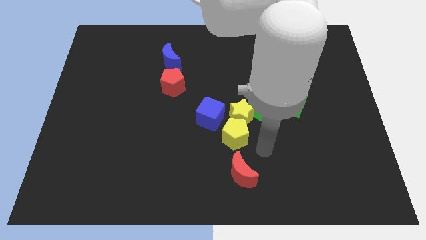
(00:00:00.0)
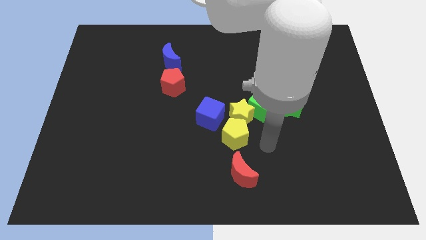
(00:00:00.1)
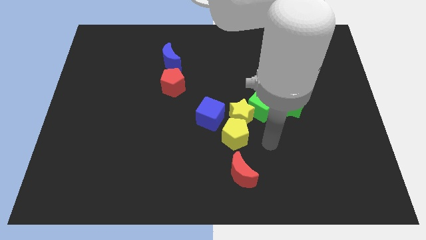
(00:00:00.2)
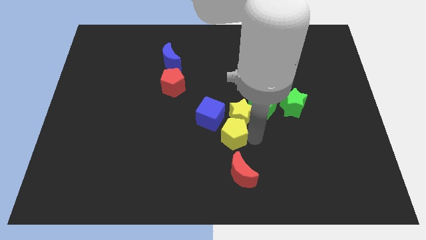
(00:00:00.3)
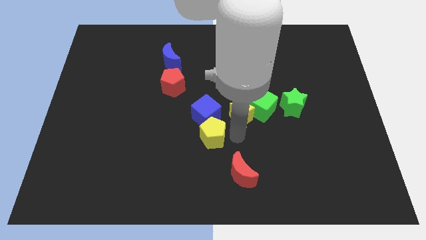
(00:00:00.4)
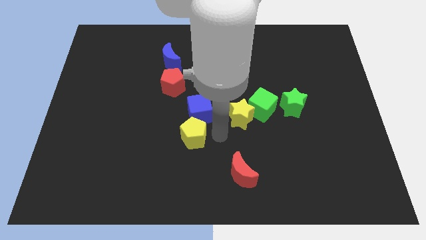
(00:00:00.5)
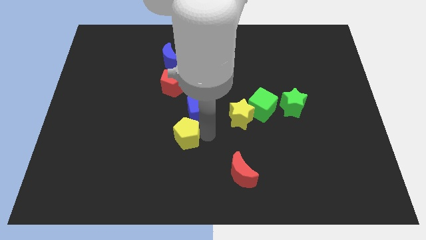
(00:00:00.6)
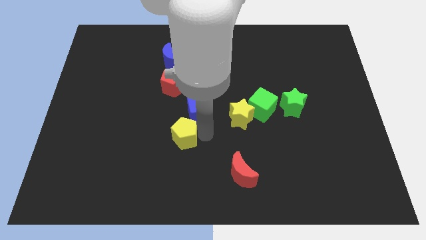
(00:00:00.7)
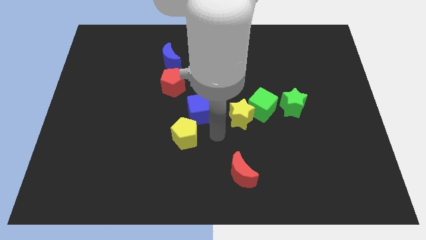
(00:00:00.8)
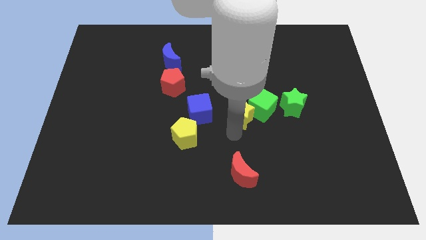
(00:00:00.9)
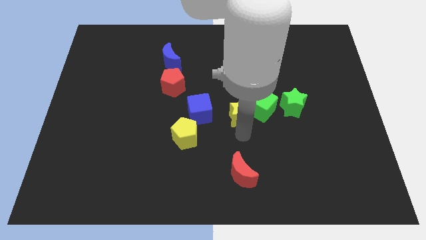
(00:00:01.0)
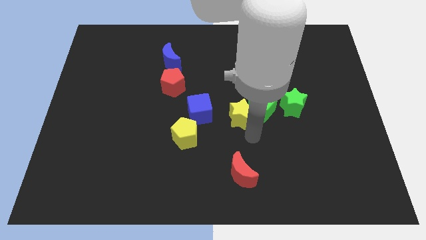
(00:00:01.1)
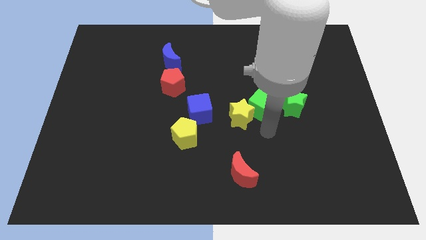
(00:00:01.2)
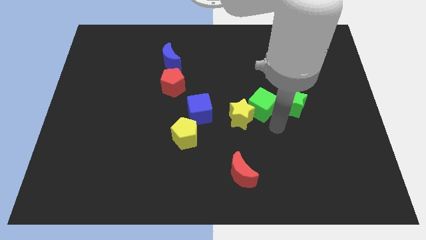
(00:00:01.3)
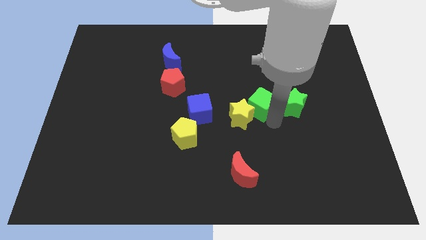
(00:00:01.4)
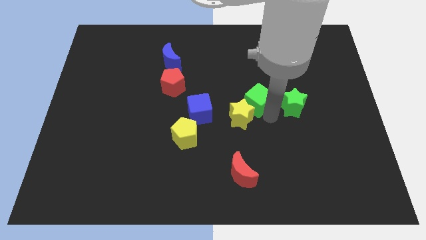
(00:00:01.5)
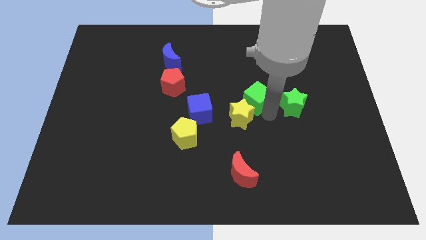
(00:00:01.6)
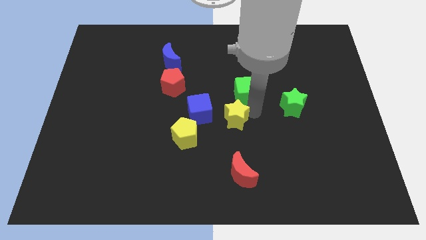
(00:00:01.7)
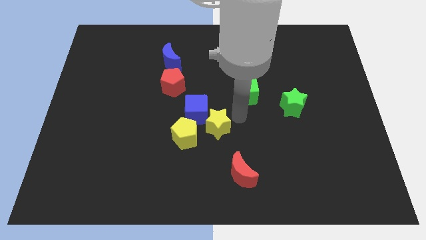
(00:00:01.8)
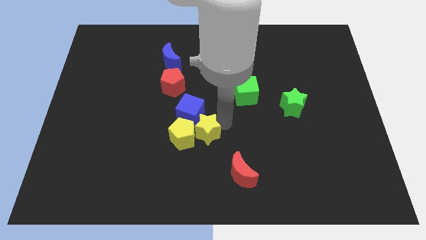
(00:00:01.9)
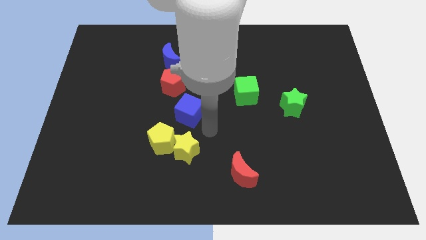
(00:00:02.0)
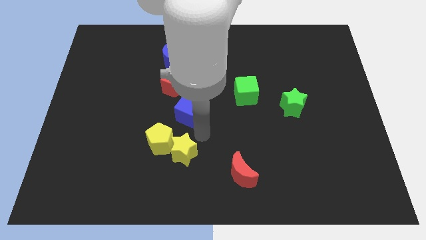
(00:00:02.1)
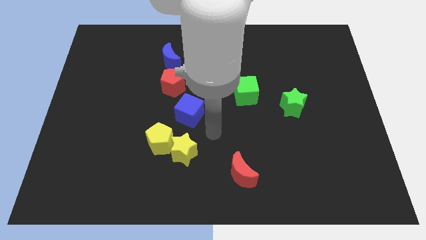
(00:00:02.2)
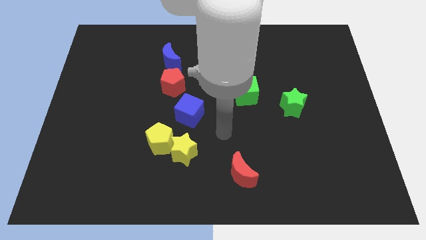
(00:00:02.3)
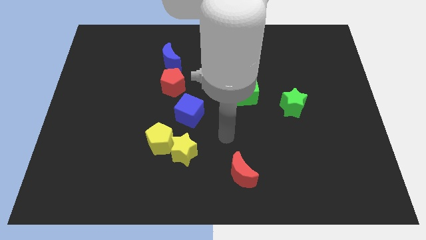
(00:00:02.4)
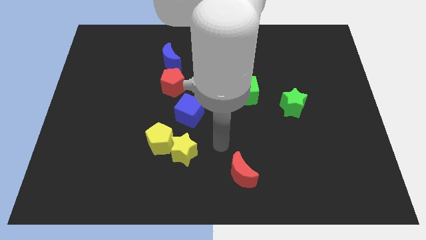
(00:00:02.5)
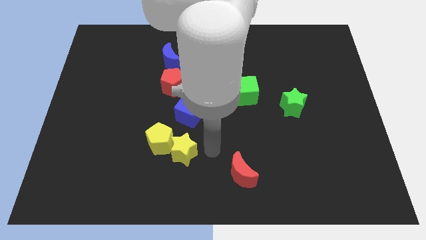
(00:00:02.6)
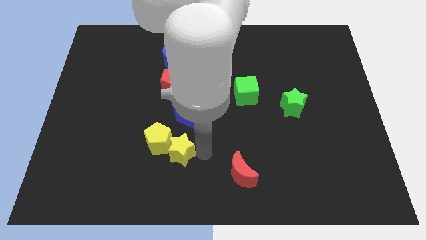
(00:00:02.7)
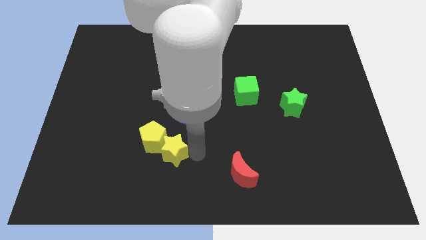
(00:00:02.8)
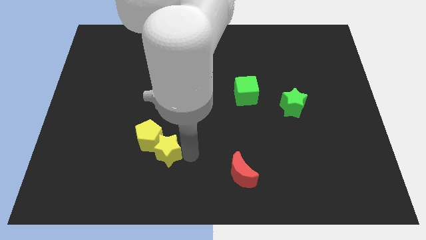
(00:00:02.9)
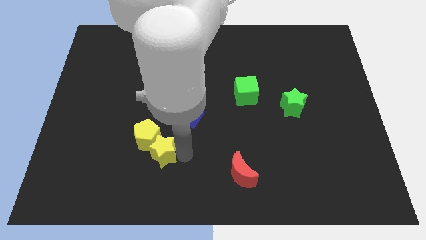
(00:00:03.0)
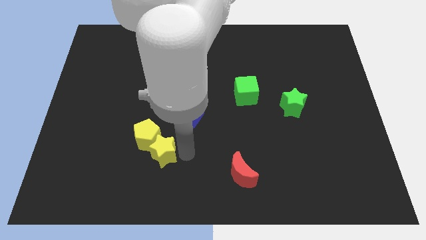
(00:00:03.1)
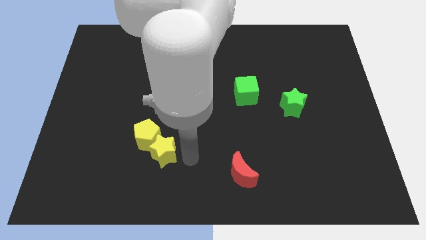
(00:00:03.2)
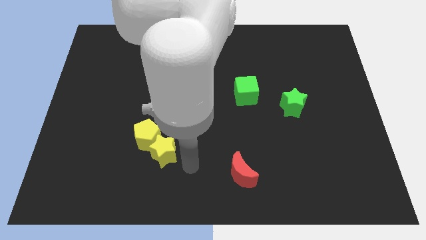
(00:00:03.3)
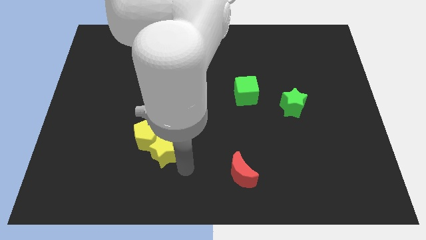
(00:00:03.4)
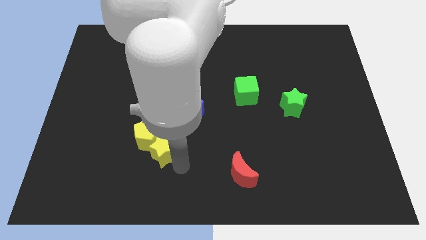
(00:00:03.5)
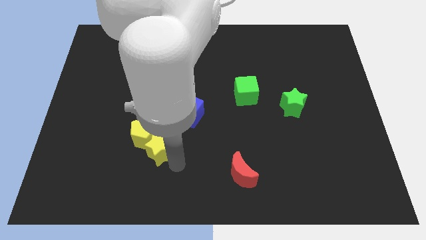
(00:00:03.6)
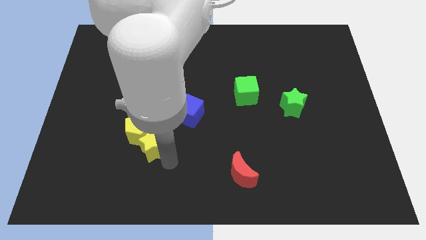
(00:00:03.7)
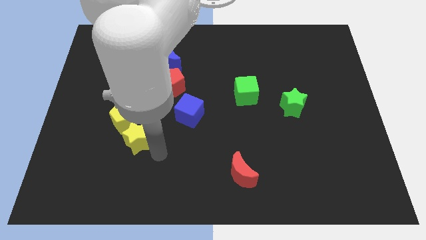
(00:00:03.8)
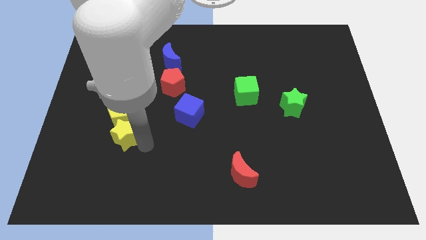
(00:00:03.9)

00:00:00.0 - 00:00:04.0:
move the yellow blocks to the center left

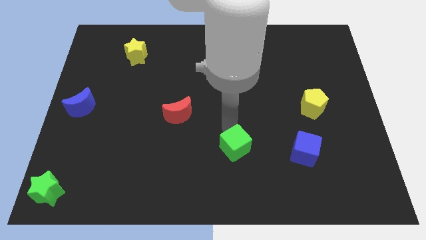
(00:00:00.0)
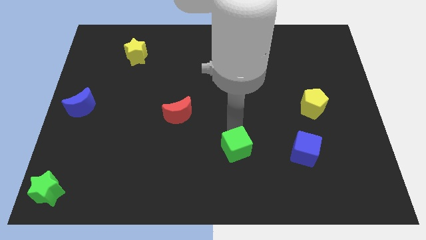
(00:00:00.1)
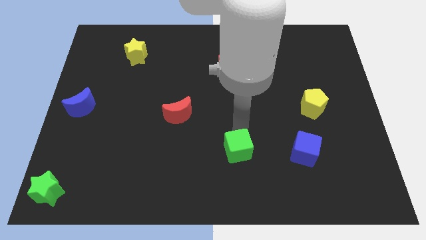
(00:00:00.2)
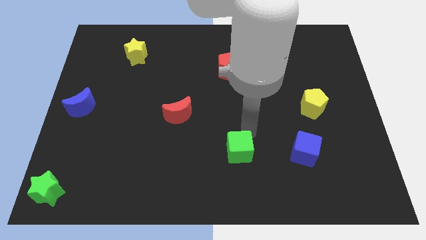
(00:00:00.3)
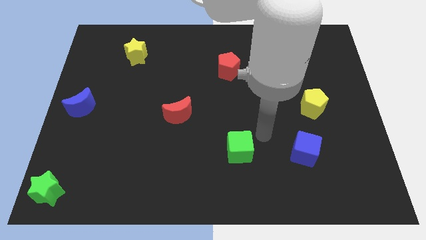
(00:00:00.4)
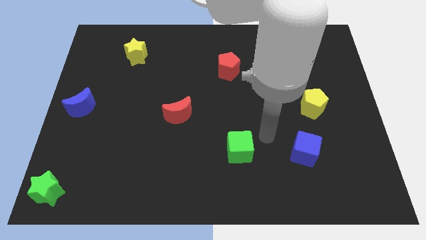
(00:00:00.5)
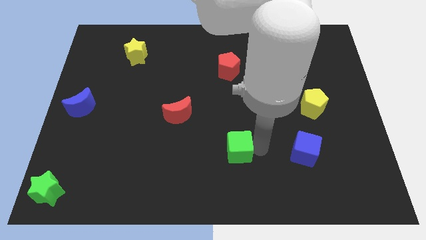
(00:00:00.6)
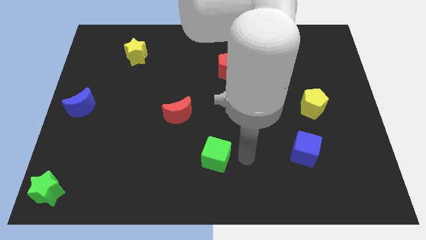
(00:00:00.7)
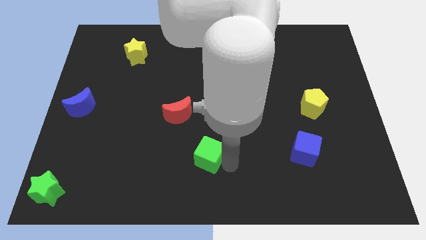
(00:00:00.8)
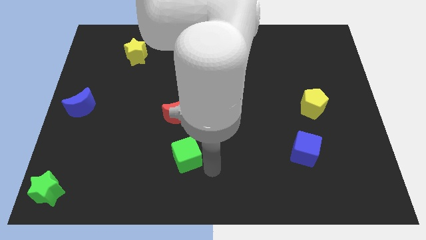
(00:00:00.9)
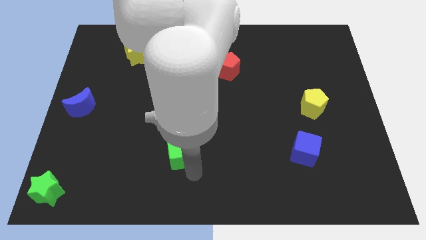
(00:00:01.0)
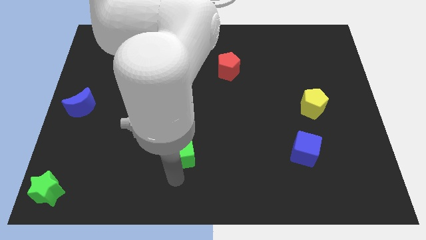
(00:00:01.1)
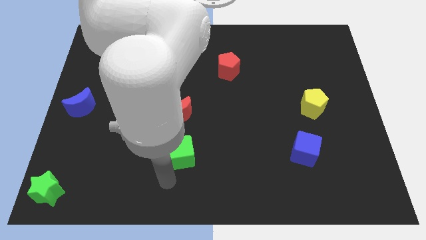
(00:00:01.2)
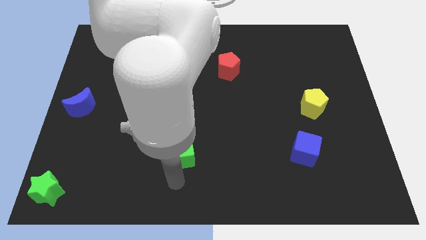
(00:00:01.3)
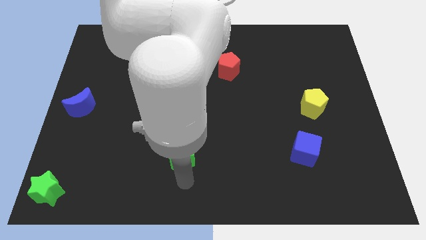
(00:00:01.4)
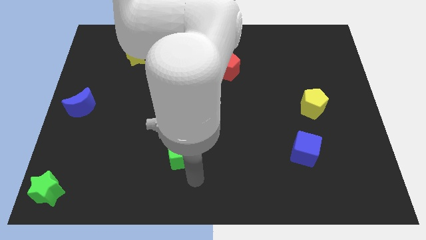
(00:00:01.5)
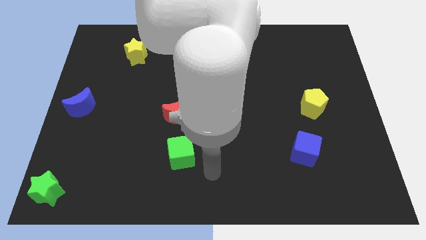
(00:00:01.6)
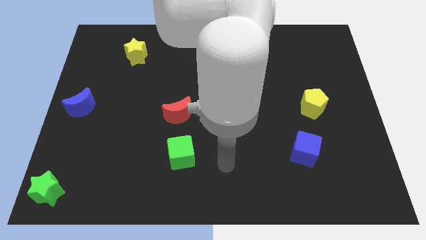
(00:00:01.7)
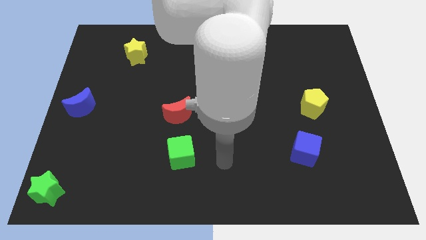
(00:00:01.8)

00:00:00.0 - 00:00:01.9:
put the green cube below the red crescent

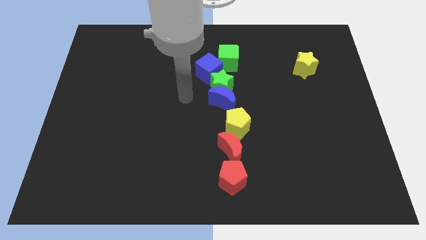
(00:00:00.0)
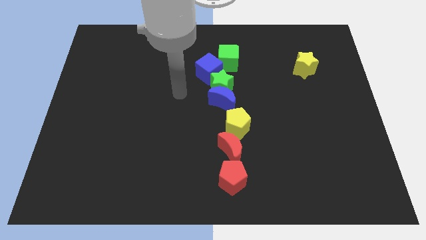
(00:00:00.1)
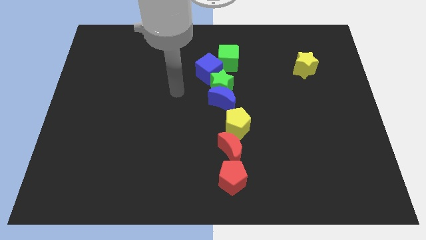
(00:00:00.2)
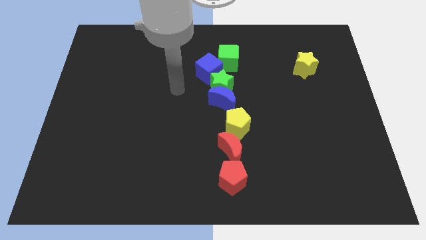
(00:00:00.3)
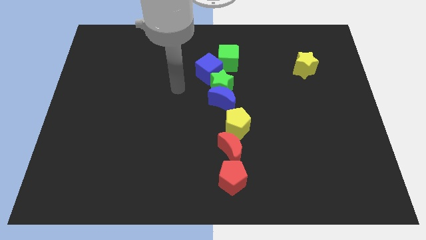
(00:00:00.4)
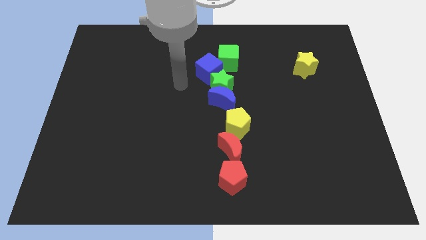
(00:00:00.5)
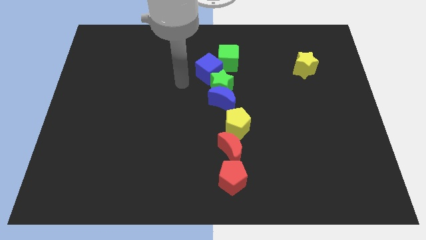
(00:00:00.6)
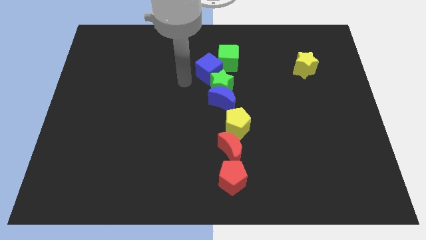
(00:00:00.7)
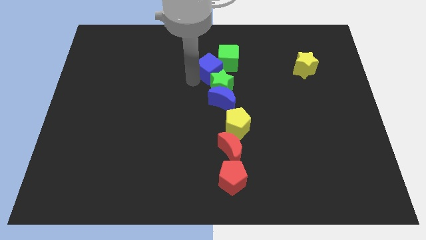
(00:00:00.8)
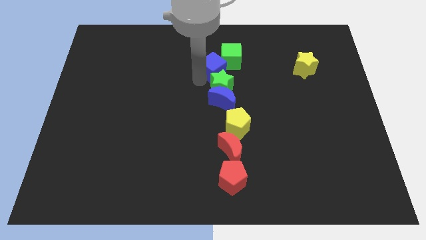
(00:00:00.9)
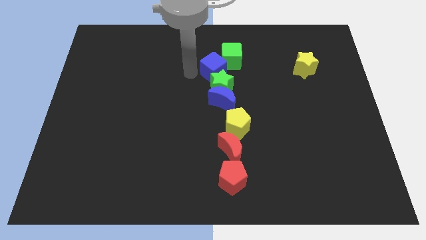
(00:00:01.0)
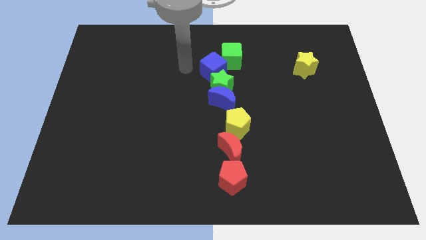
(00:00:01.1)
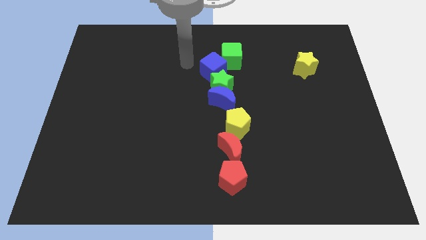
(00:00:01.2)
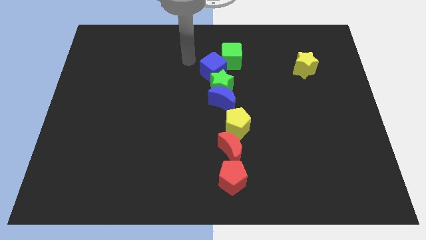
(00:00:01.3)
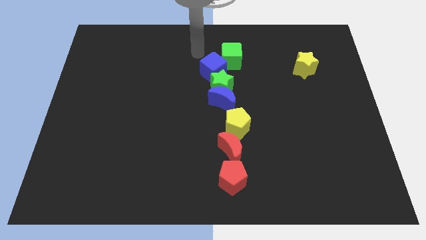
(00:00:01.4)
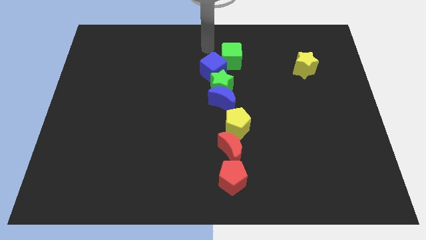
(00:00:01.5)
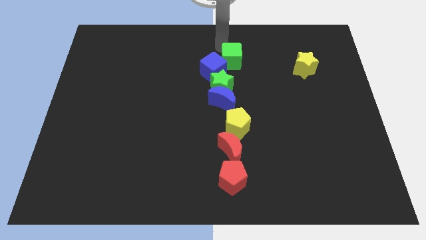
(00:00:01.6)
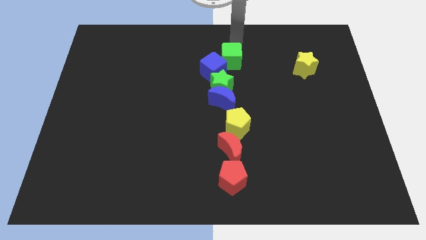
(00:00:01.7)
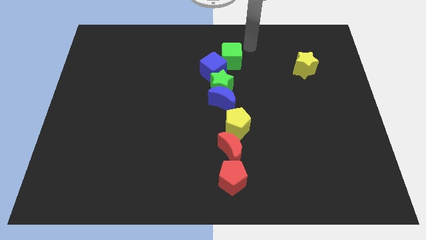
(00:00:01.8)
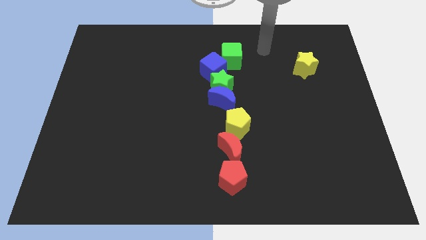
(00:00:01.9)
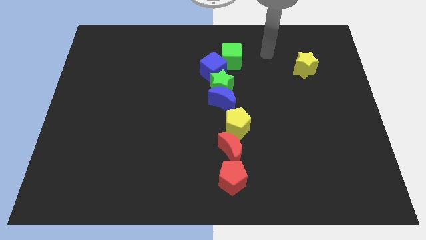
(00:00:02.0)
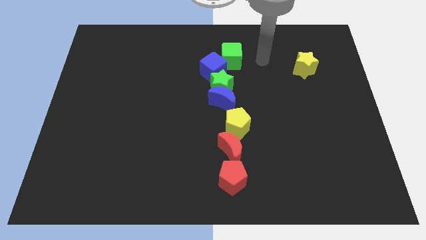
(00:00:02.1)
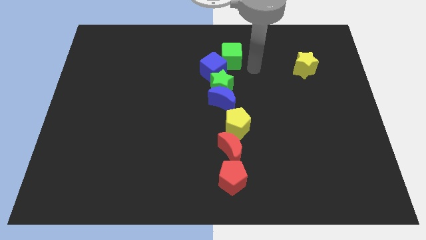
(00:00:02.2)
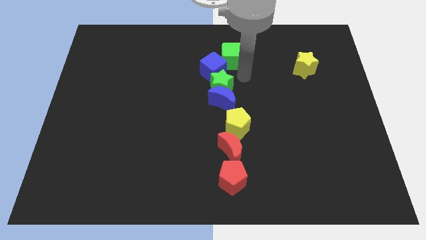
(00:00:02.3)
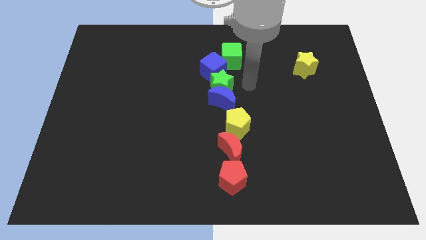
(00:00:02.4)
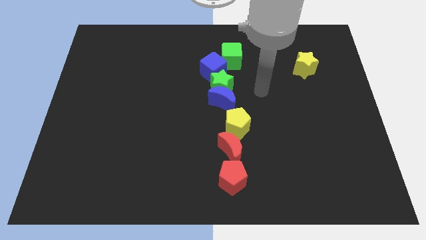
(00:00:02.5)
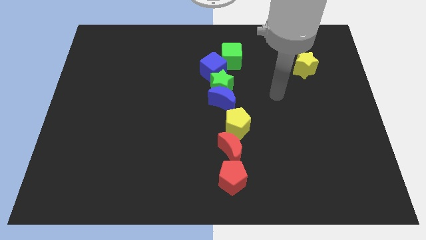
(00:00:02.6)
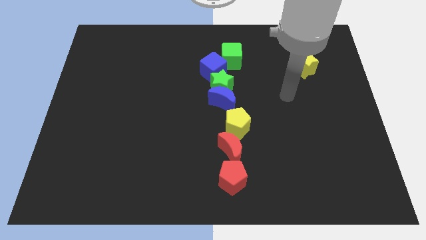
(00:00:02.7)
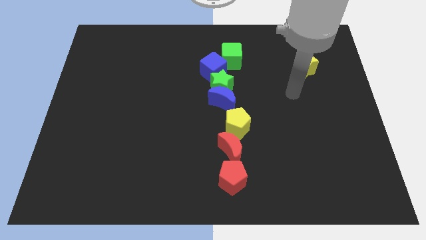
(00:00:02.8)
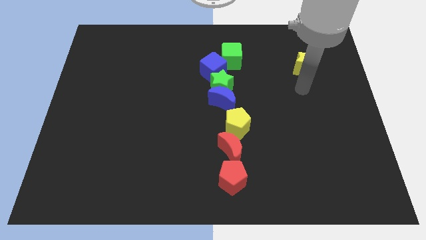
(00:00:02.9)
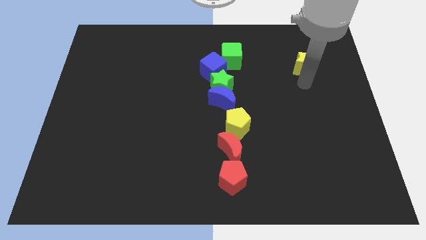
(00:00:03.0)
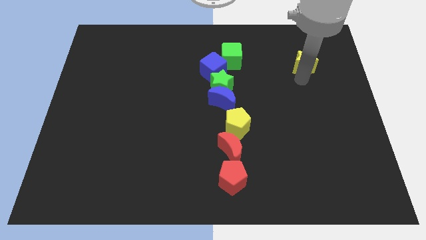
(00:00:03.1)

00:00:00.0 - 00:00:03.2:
point your arm at the bottom of the yellow star
